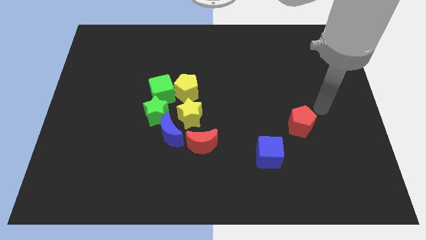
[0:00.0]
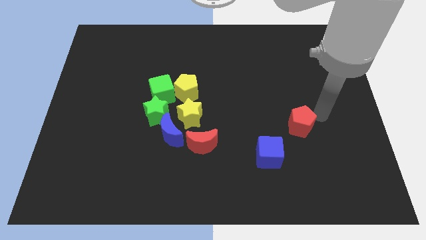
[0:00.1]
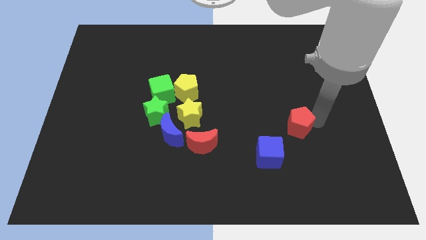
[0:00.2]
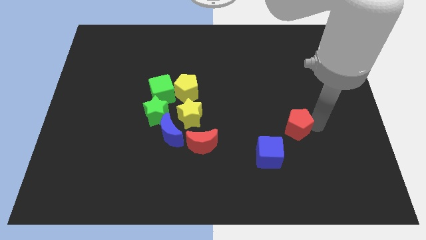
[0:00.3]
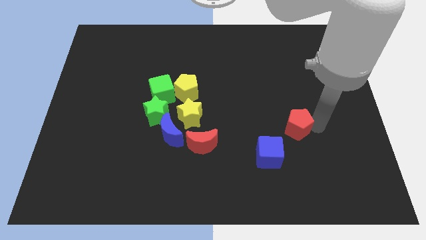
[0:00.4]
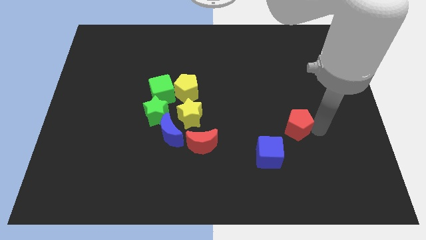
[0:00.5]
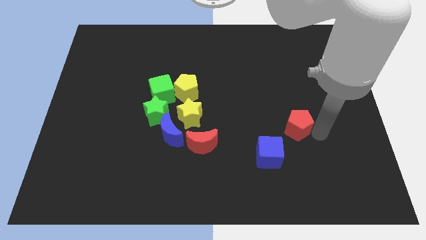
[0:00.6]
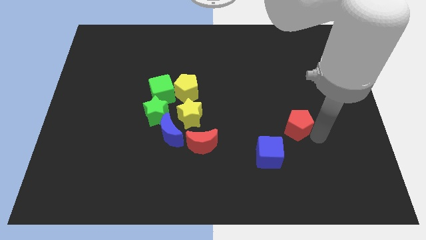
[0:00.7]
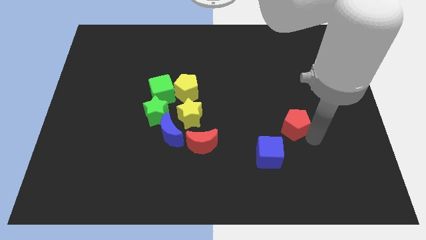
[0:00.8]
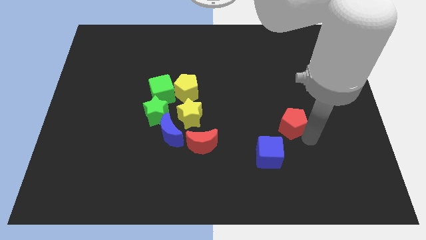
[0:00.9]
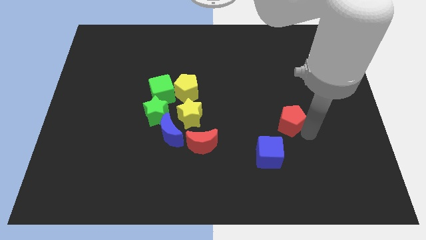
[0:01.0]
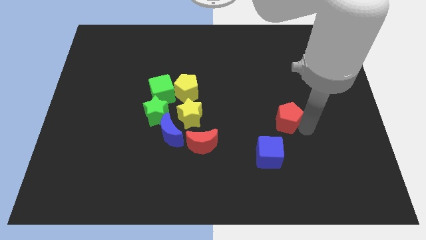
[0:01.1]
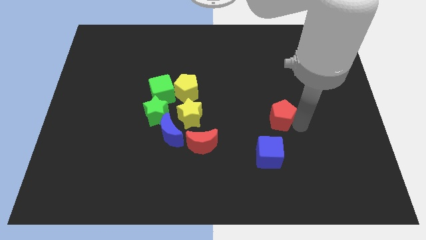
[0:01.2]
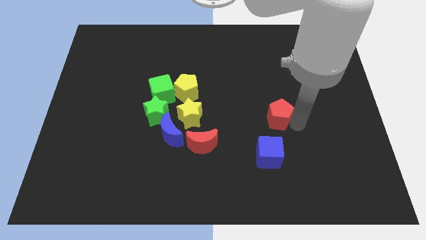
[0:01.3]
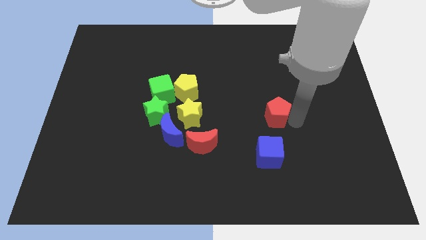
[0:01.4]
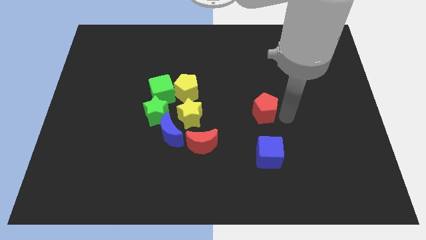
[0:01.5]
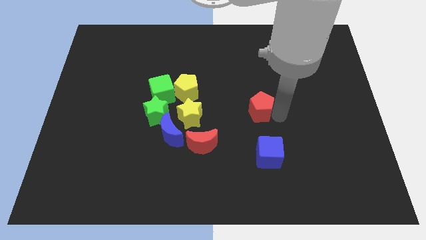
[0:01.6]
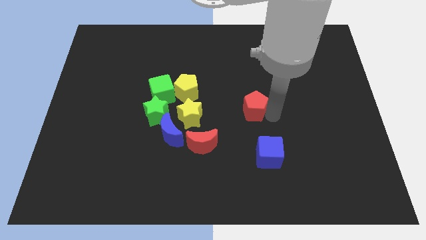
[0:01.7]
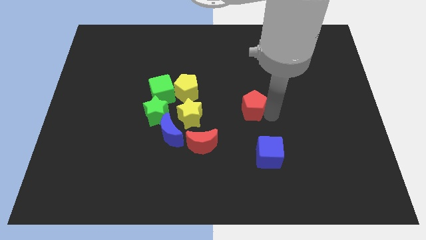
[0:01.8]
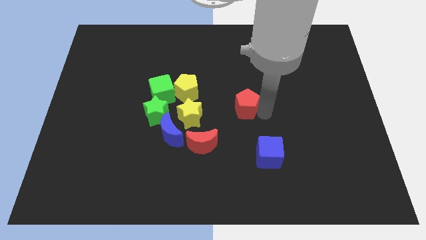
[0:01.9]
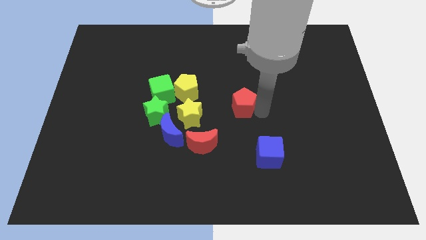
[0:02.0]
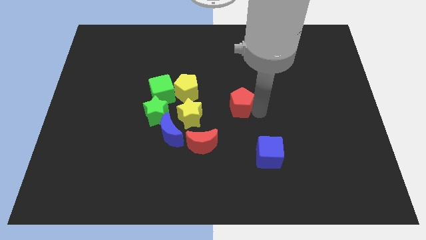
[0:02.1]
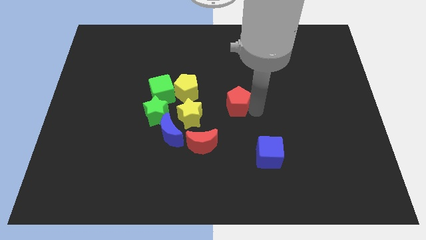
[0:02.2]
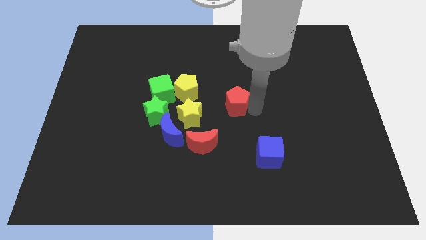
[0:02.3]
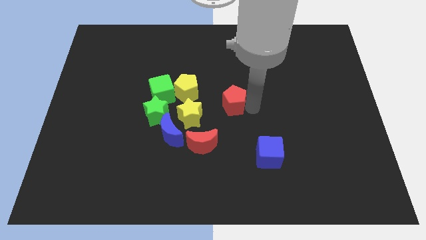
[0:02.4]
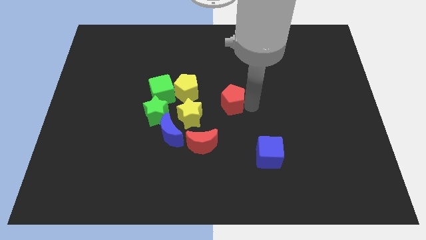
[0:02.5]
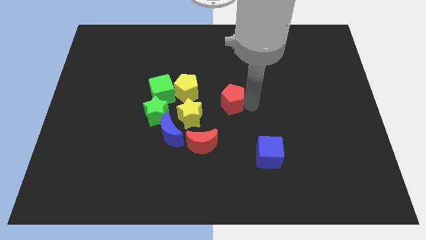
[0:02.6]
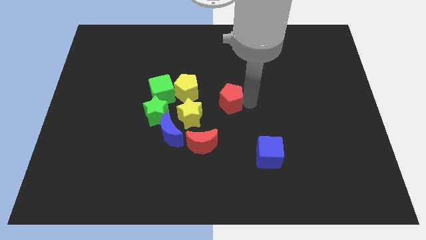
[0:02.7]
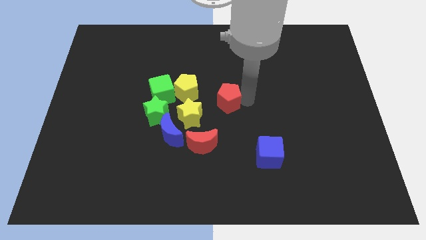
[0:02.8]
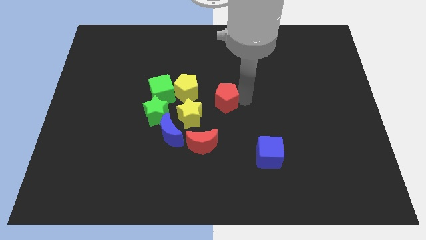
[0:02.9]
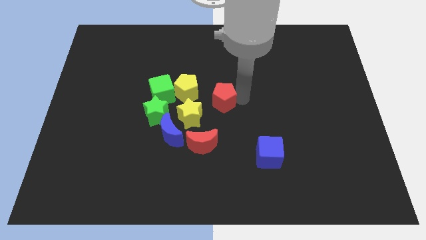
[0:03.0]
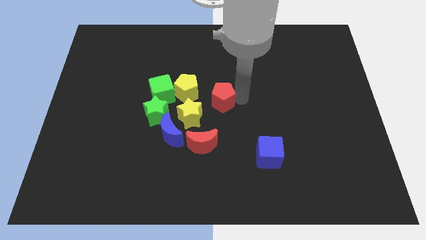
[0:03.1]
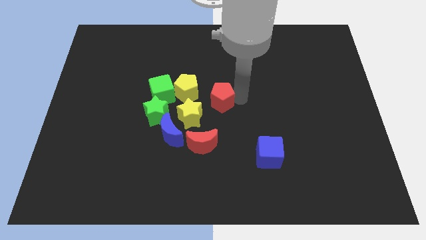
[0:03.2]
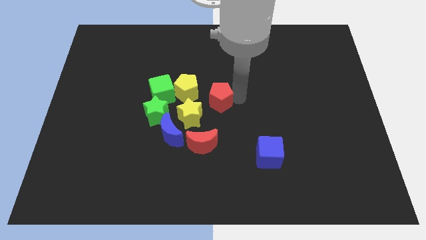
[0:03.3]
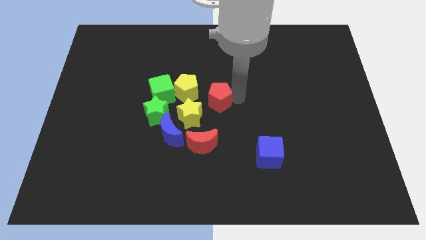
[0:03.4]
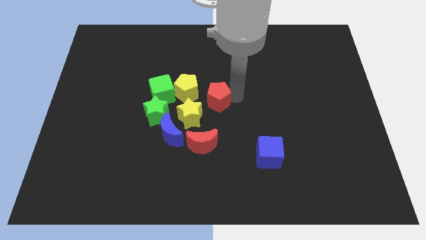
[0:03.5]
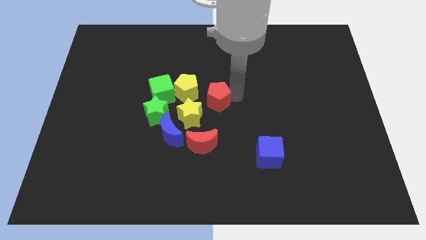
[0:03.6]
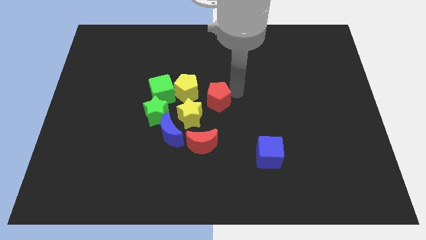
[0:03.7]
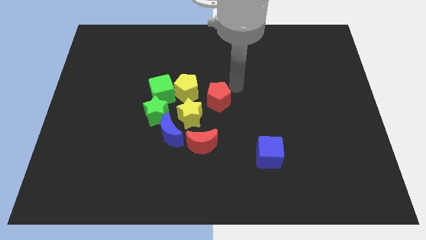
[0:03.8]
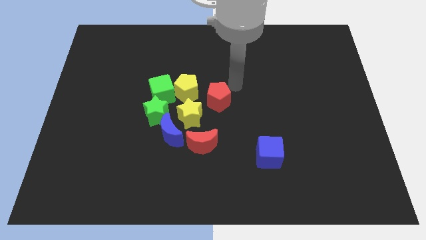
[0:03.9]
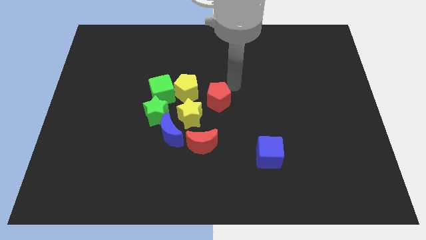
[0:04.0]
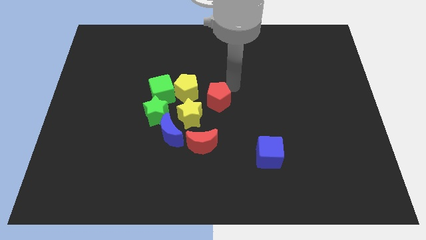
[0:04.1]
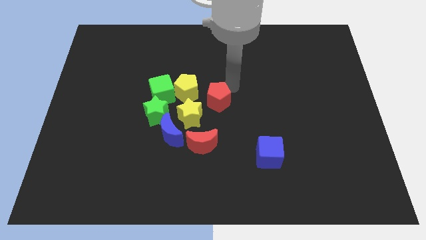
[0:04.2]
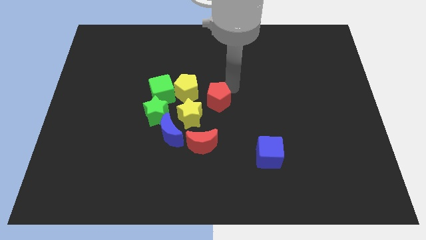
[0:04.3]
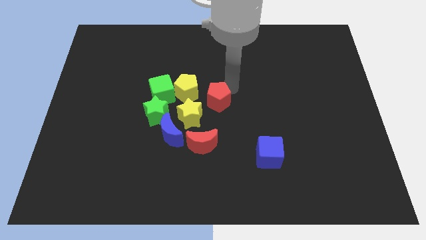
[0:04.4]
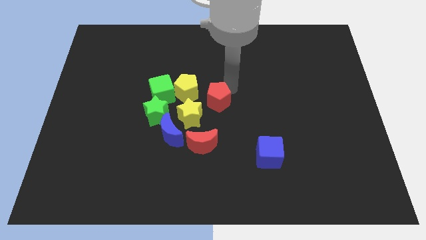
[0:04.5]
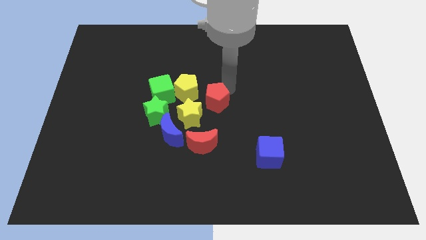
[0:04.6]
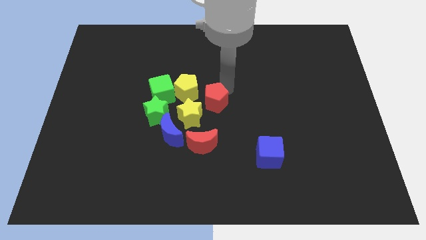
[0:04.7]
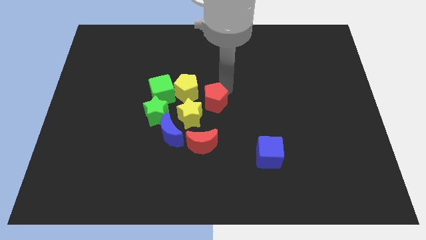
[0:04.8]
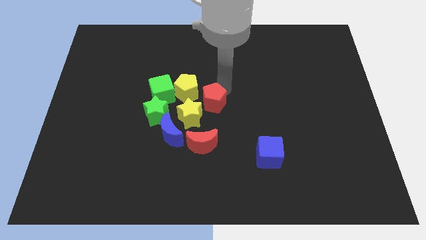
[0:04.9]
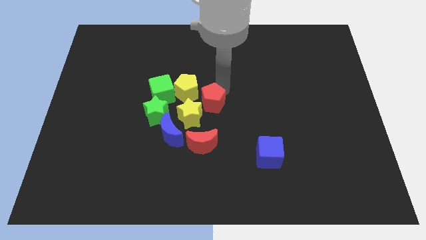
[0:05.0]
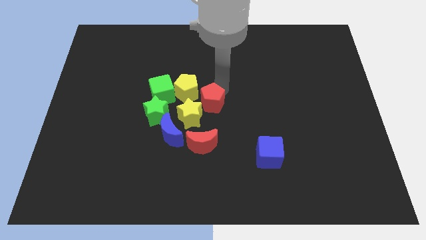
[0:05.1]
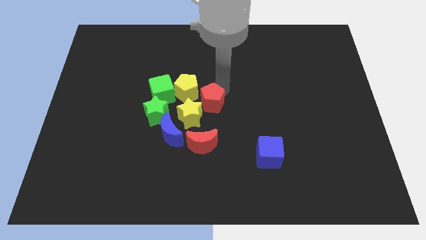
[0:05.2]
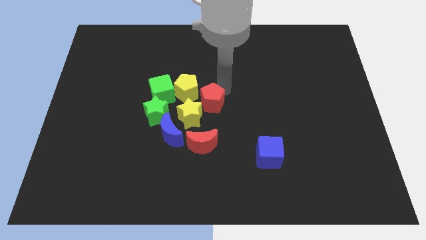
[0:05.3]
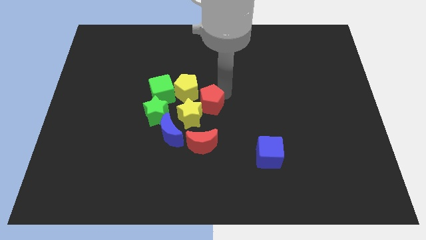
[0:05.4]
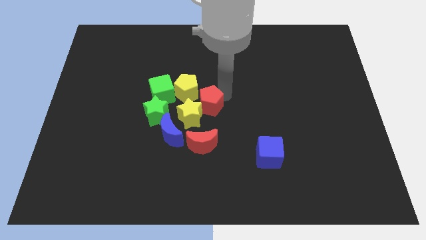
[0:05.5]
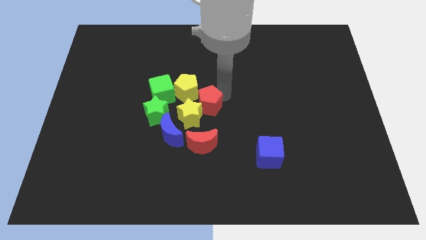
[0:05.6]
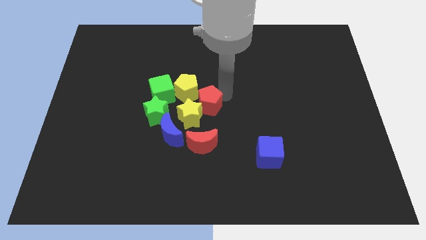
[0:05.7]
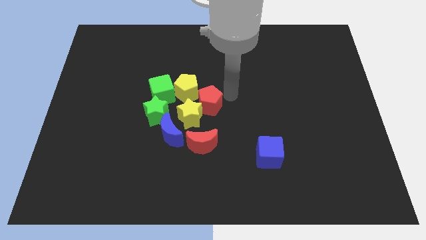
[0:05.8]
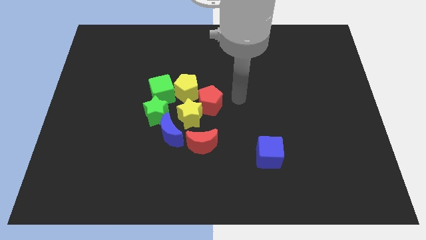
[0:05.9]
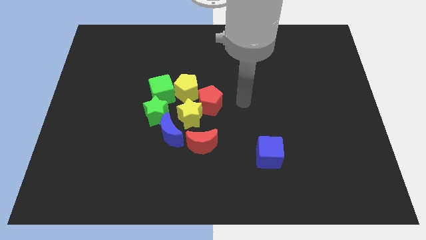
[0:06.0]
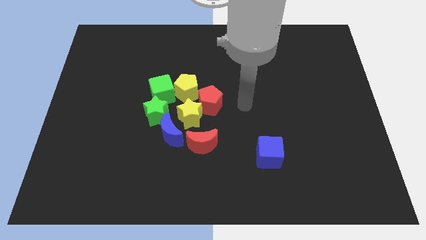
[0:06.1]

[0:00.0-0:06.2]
place the red pentagon closer to the yellow star

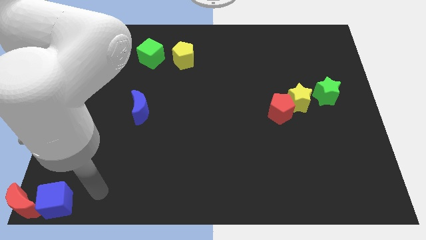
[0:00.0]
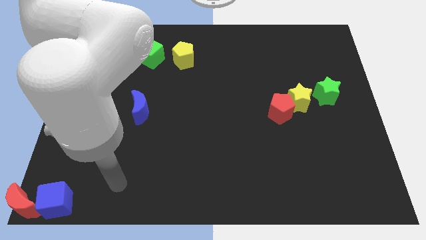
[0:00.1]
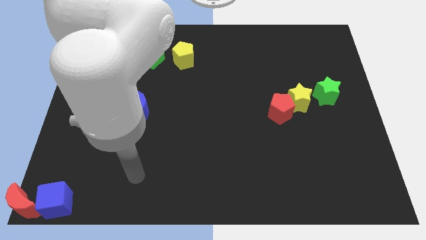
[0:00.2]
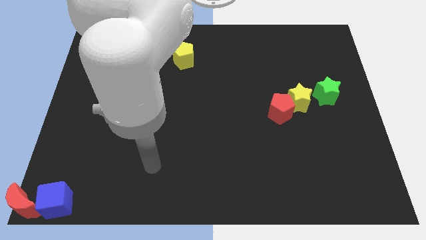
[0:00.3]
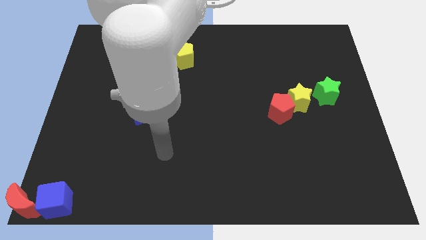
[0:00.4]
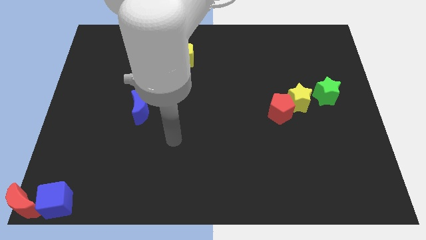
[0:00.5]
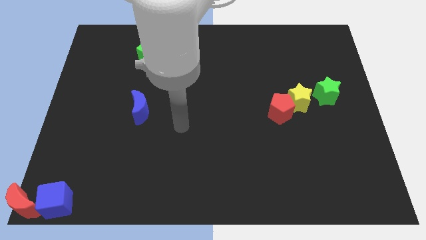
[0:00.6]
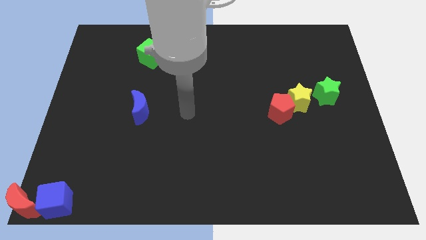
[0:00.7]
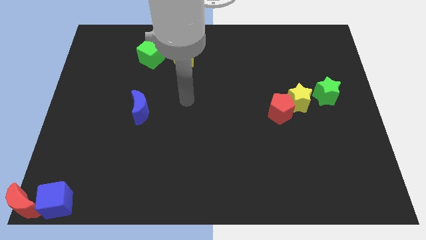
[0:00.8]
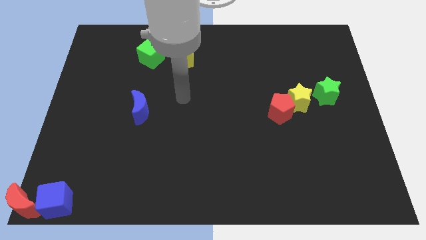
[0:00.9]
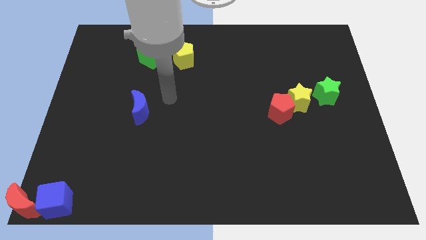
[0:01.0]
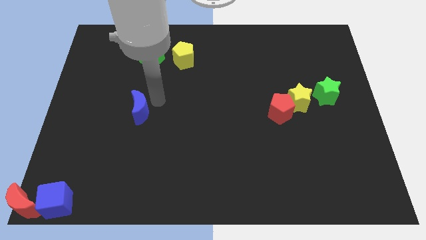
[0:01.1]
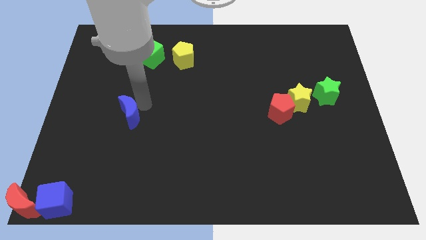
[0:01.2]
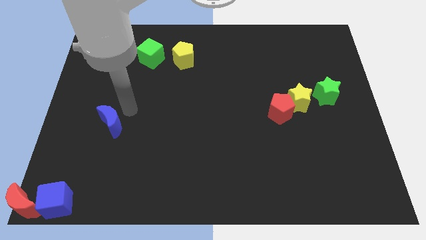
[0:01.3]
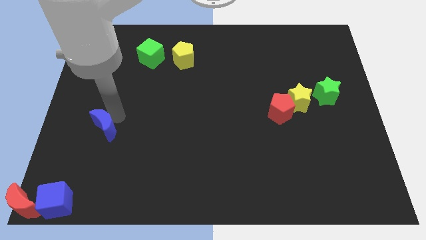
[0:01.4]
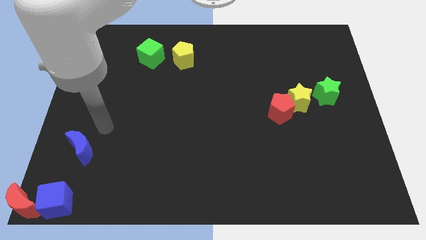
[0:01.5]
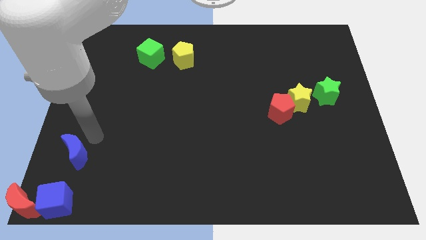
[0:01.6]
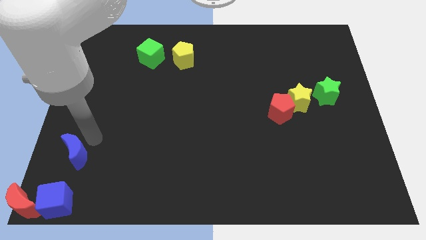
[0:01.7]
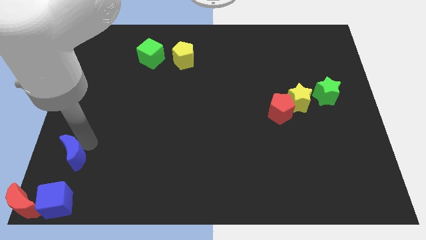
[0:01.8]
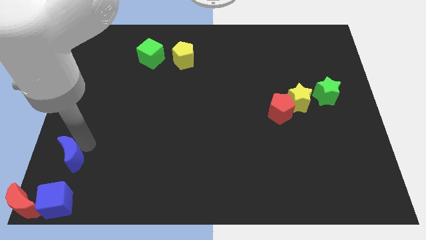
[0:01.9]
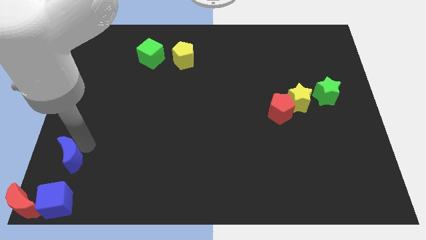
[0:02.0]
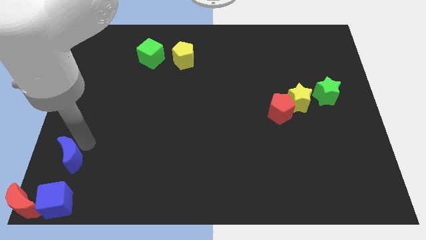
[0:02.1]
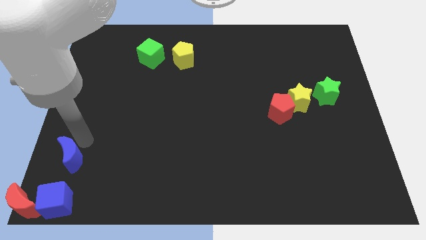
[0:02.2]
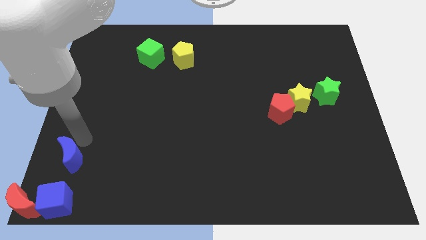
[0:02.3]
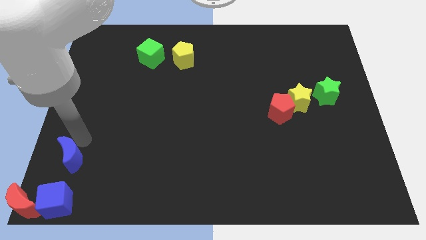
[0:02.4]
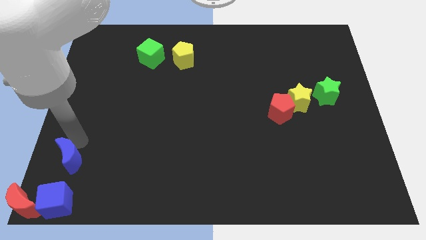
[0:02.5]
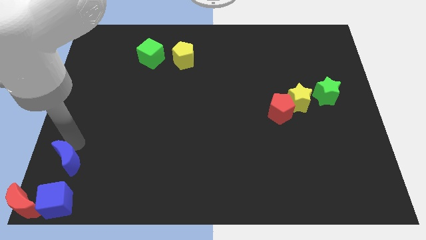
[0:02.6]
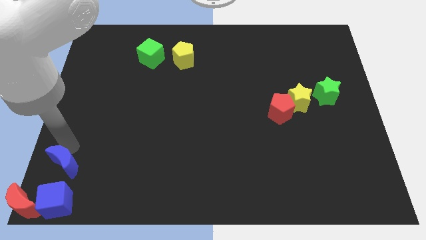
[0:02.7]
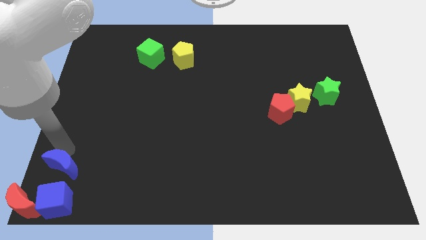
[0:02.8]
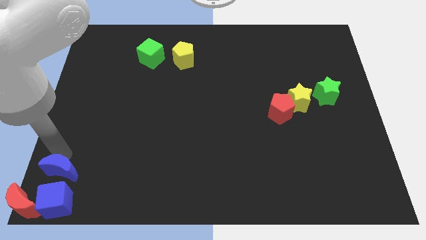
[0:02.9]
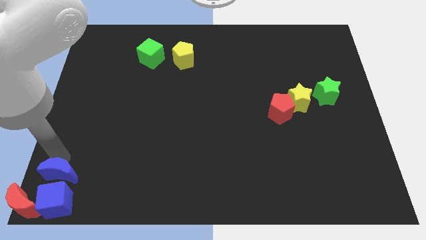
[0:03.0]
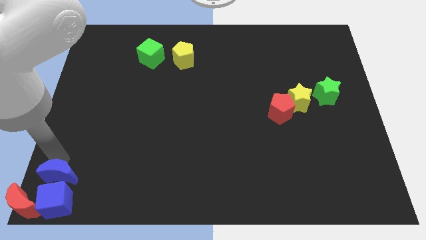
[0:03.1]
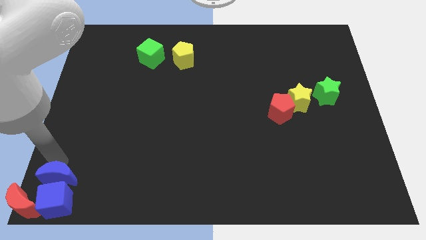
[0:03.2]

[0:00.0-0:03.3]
push the blue crescent to the top side of the blue cube
